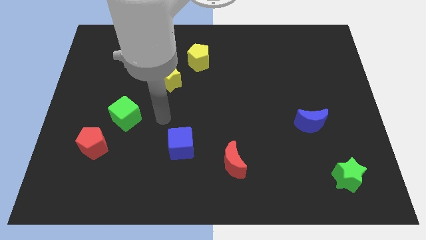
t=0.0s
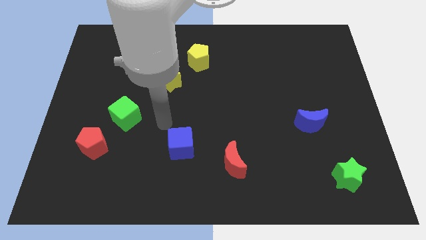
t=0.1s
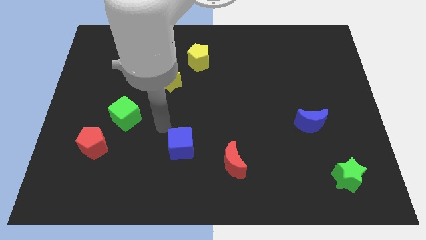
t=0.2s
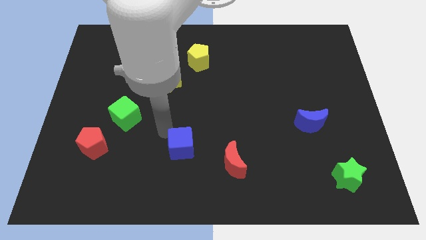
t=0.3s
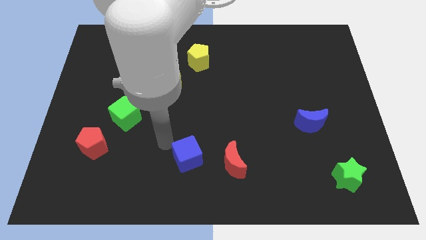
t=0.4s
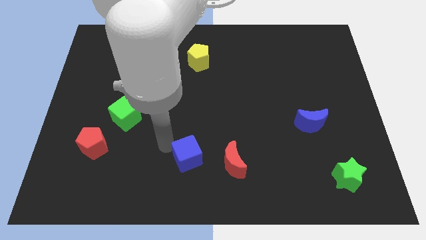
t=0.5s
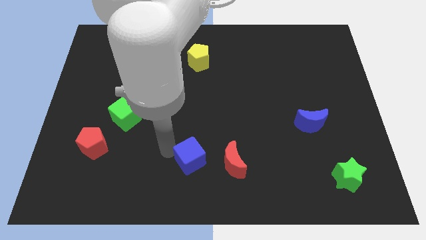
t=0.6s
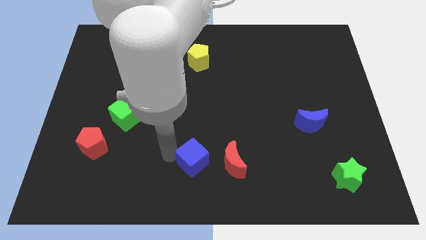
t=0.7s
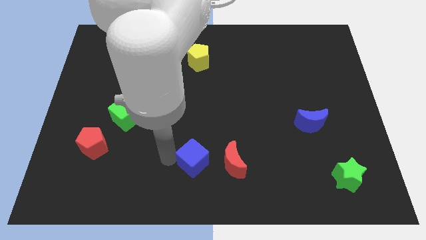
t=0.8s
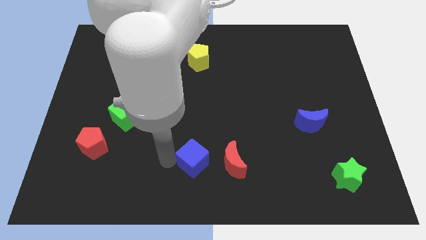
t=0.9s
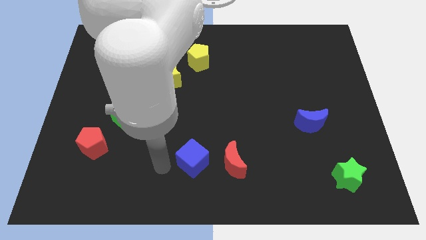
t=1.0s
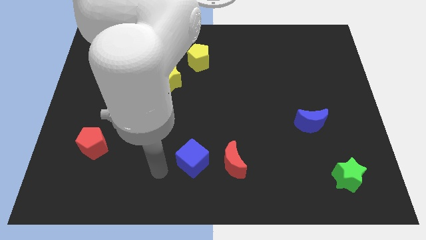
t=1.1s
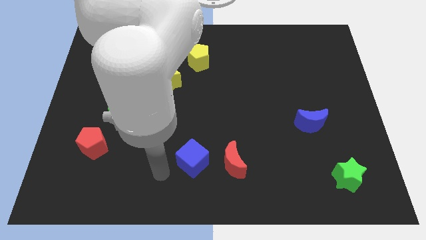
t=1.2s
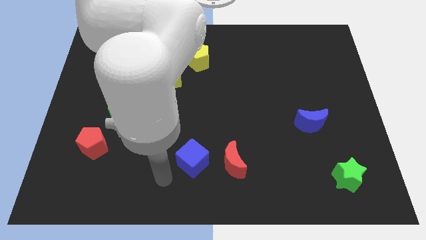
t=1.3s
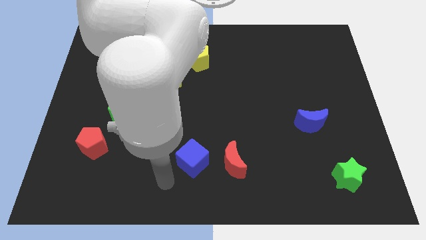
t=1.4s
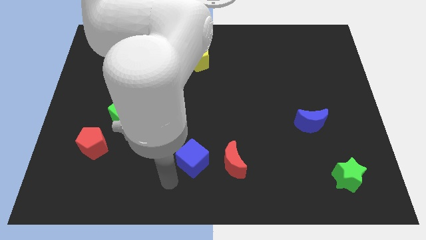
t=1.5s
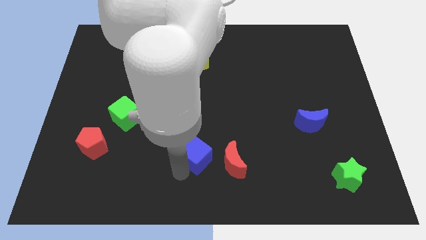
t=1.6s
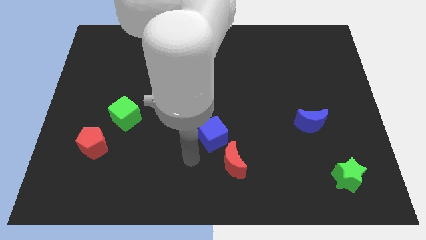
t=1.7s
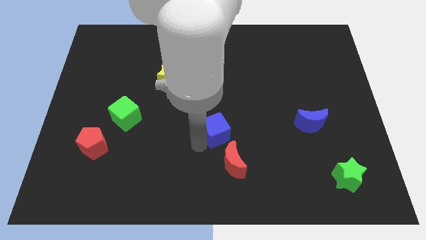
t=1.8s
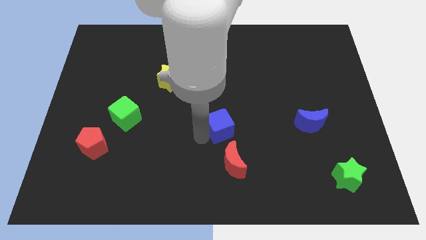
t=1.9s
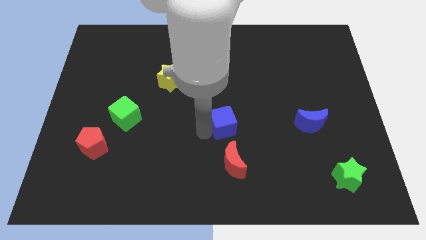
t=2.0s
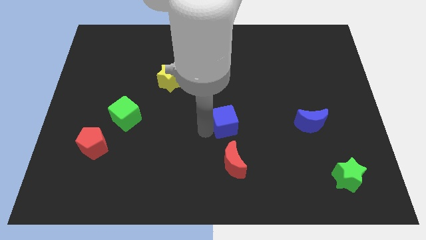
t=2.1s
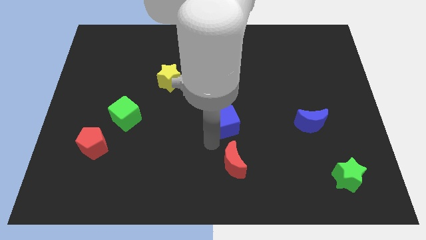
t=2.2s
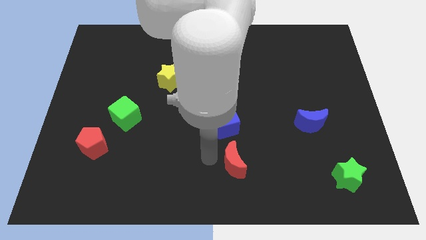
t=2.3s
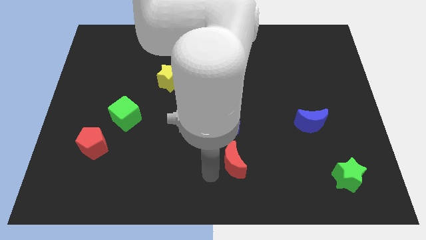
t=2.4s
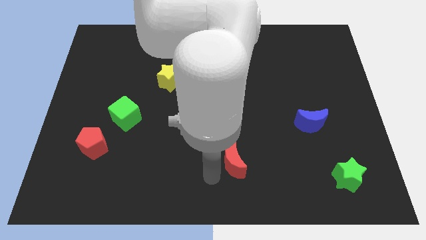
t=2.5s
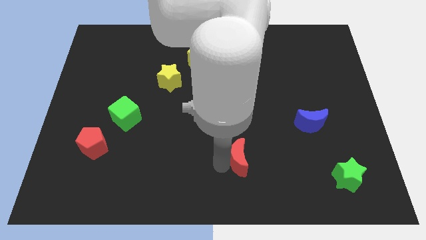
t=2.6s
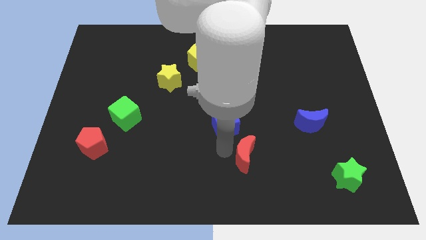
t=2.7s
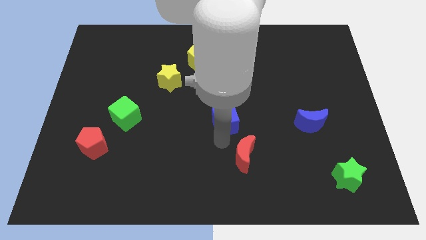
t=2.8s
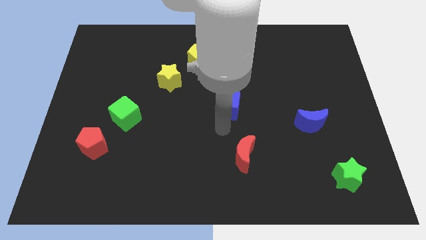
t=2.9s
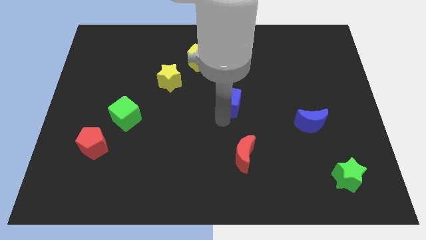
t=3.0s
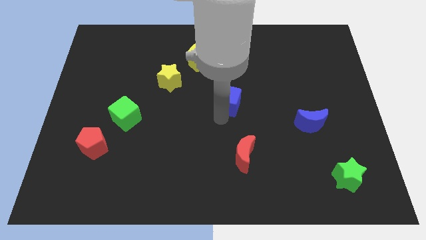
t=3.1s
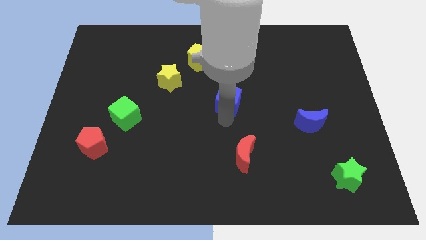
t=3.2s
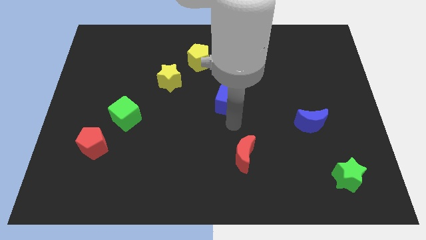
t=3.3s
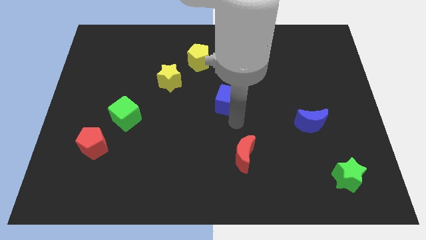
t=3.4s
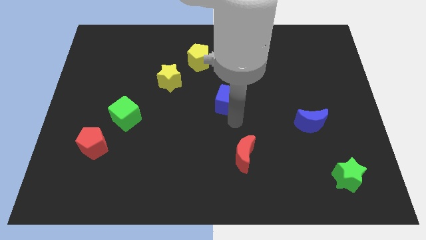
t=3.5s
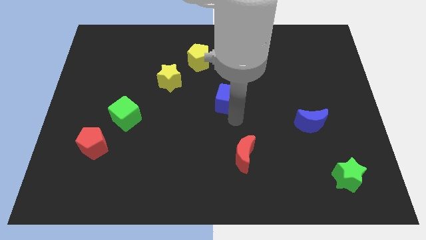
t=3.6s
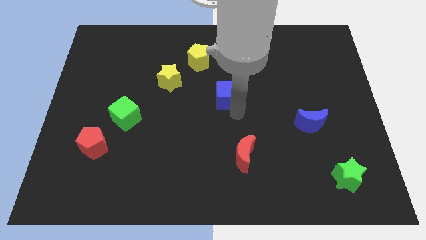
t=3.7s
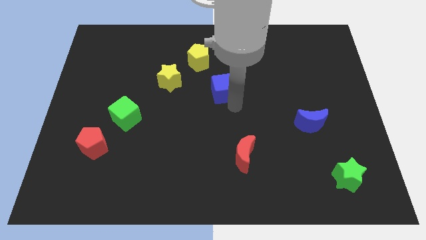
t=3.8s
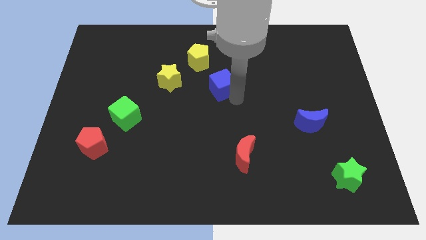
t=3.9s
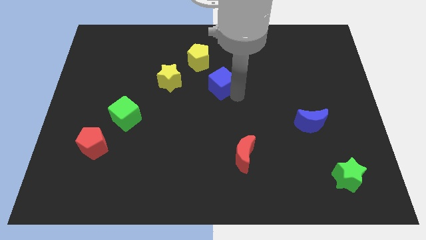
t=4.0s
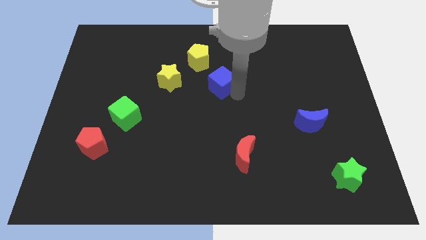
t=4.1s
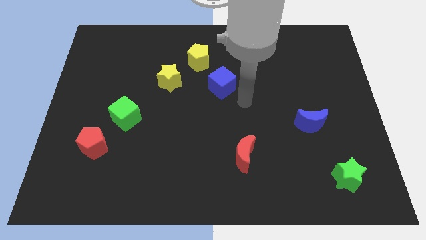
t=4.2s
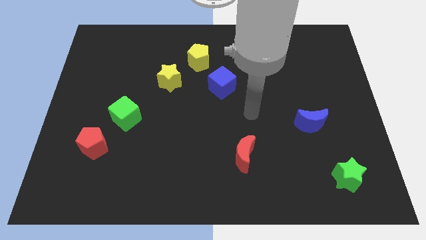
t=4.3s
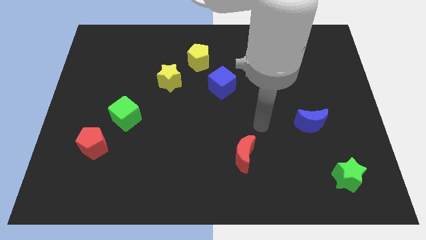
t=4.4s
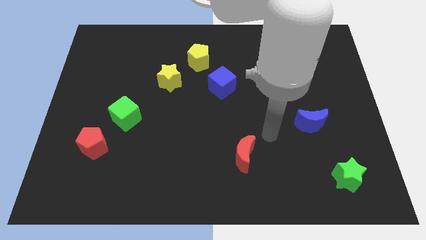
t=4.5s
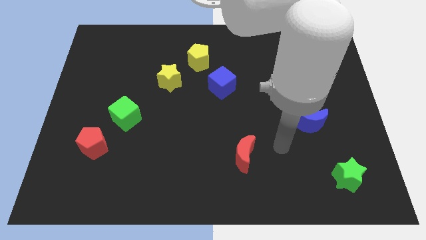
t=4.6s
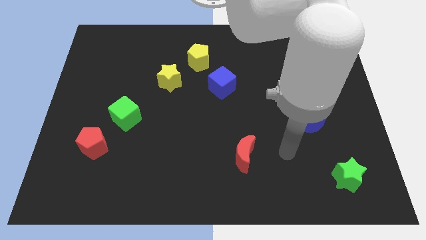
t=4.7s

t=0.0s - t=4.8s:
push the blue cube towards the yellow pentagon

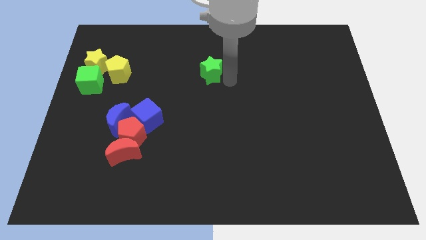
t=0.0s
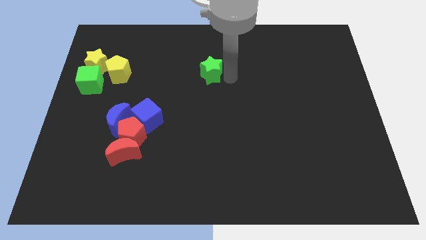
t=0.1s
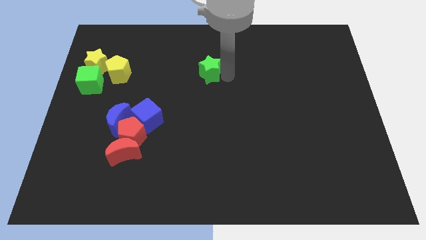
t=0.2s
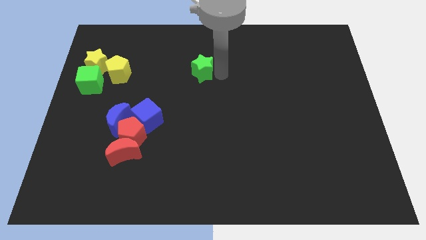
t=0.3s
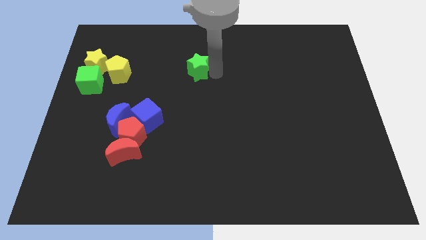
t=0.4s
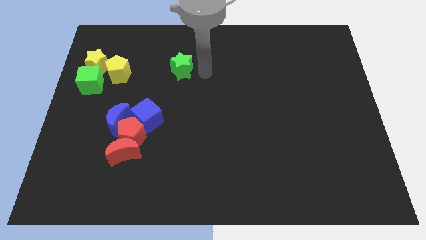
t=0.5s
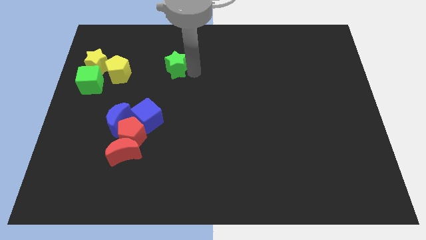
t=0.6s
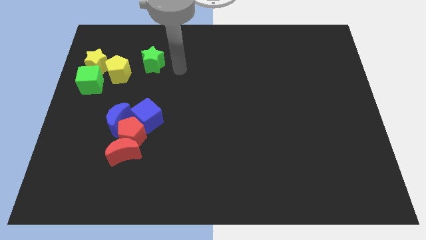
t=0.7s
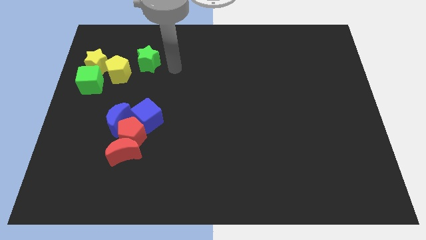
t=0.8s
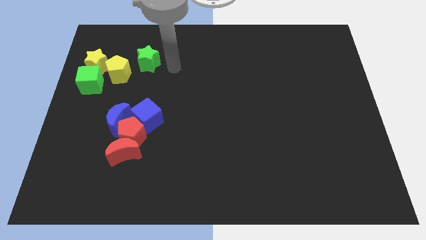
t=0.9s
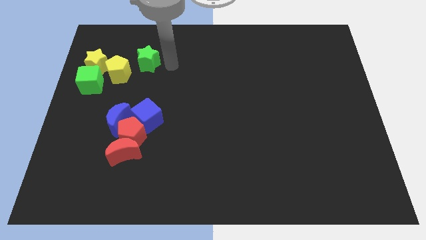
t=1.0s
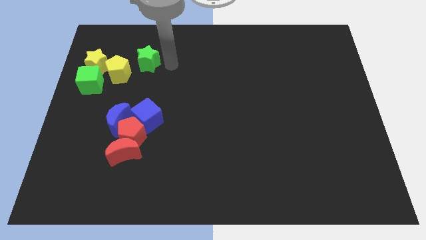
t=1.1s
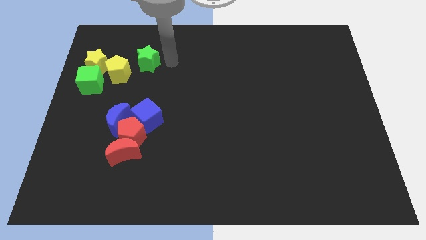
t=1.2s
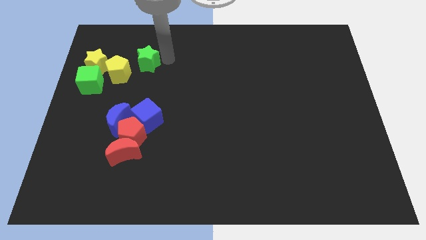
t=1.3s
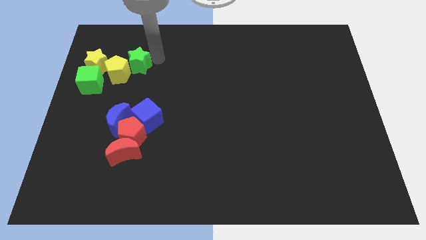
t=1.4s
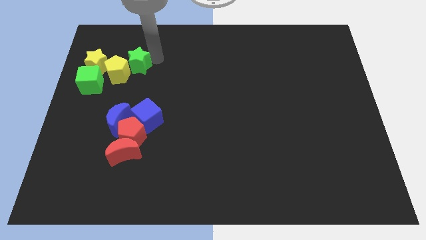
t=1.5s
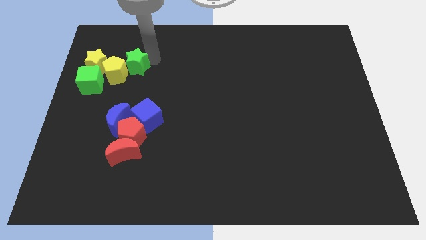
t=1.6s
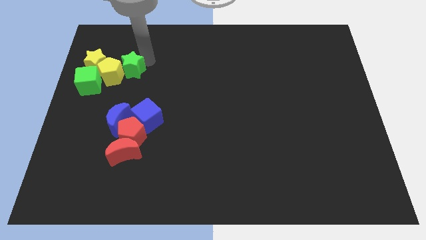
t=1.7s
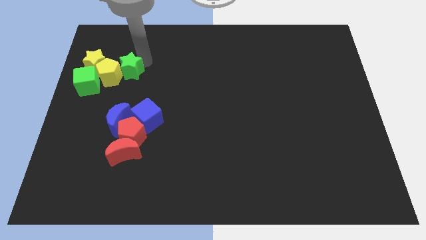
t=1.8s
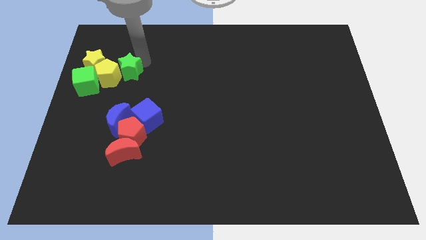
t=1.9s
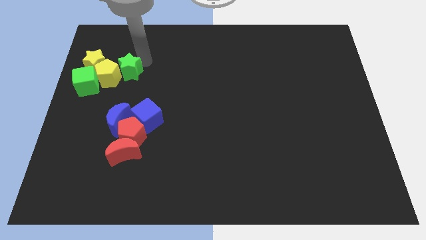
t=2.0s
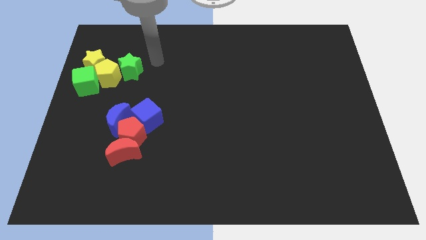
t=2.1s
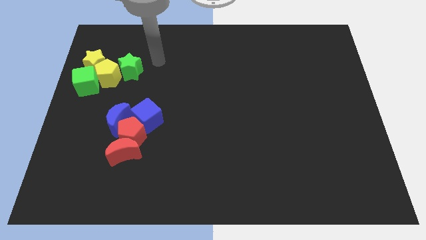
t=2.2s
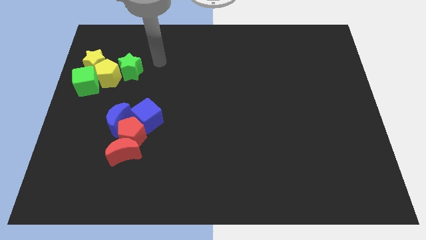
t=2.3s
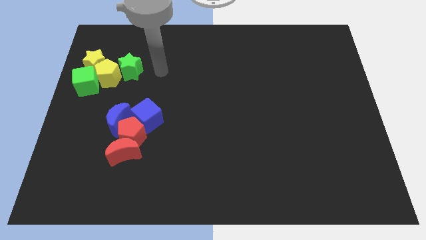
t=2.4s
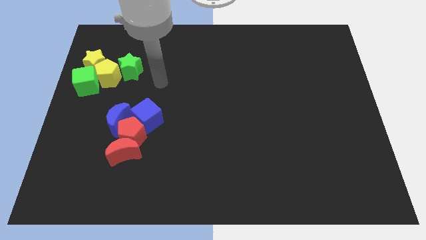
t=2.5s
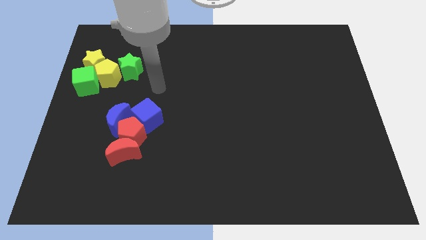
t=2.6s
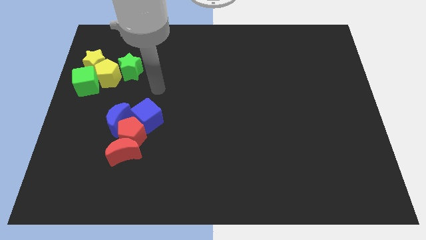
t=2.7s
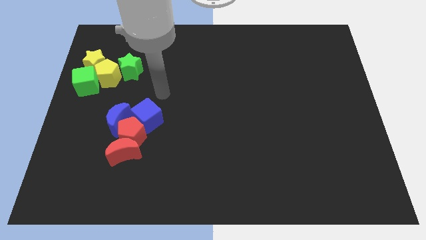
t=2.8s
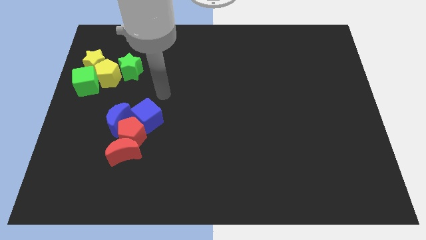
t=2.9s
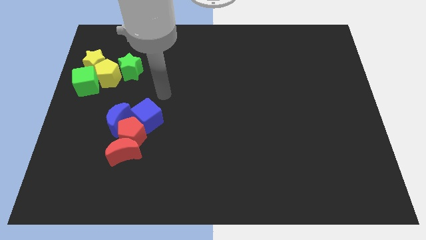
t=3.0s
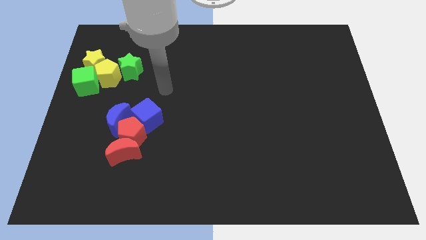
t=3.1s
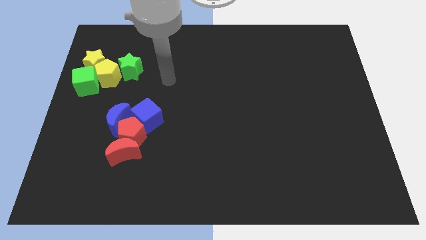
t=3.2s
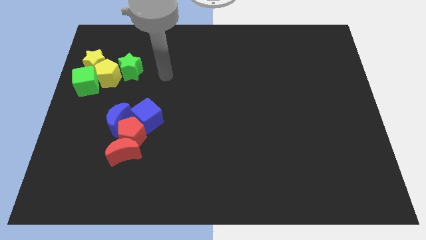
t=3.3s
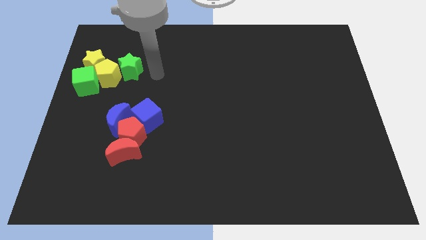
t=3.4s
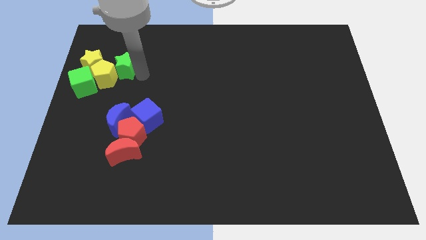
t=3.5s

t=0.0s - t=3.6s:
push the green star into the yellow pentagon

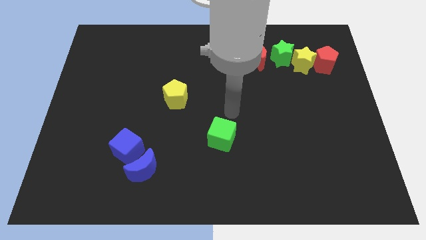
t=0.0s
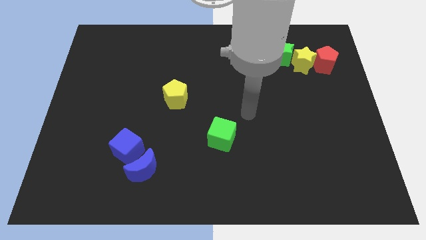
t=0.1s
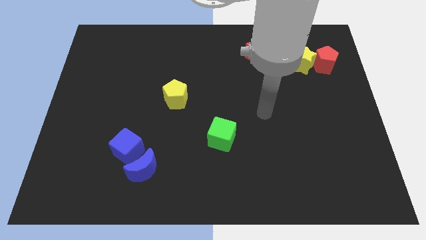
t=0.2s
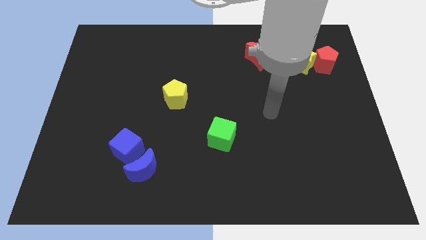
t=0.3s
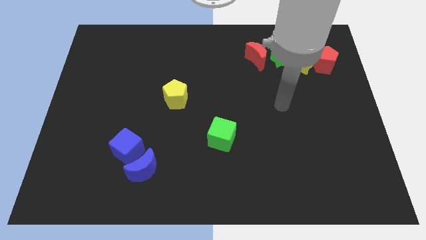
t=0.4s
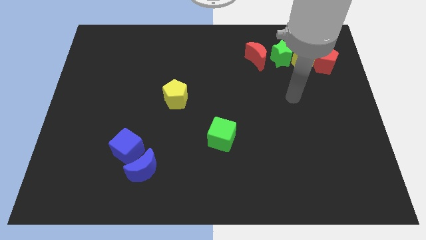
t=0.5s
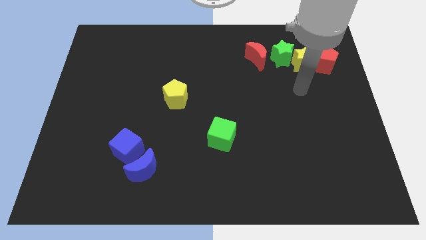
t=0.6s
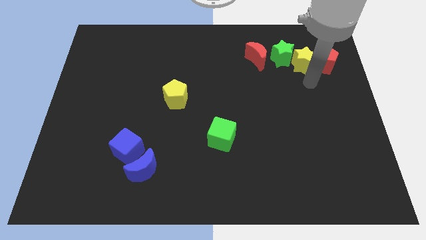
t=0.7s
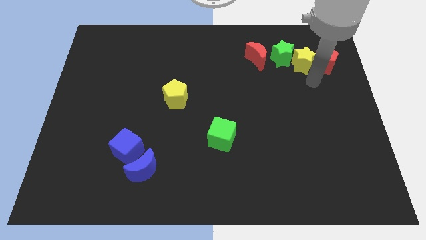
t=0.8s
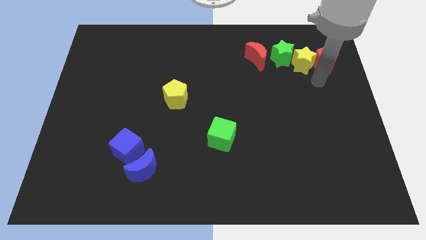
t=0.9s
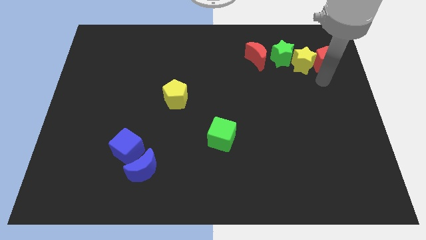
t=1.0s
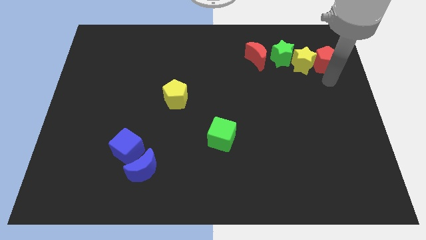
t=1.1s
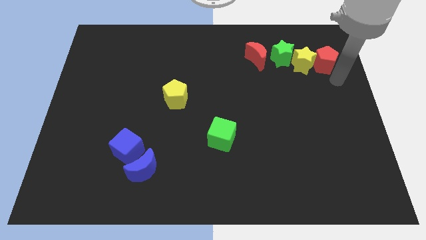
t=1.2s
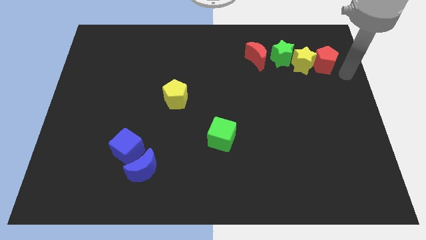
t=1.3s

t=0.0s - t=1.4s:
move the arm to the top right corner of the board
